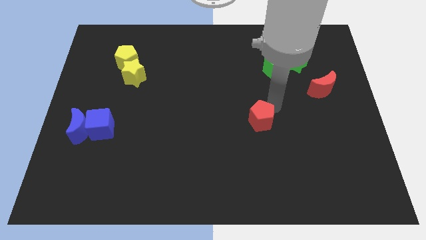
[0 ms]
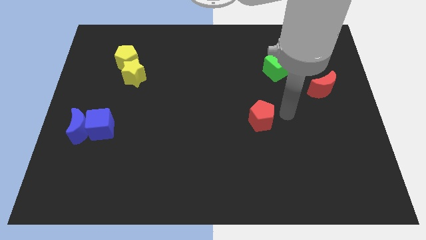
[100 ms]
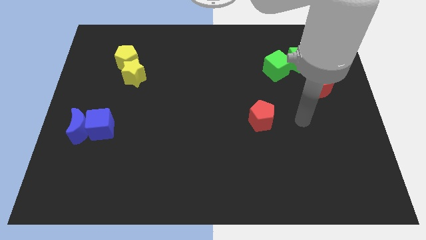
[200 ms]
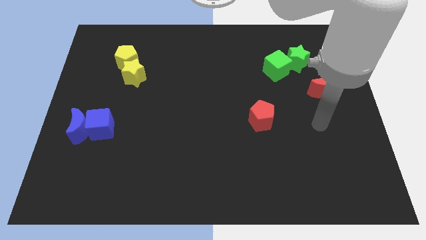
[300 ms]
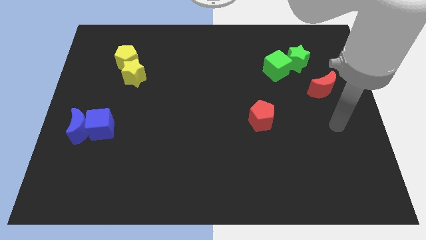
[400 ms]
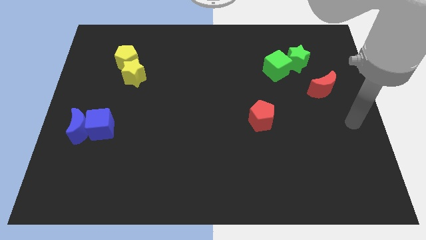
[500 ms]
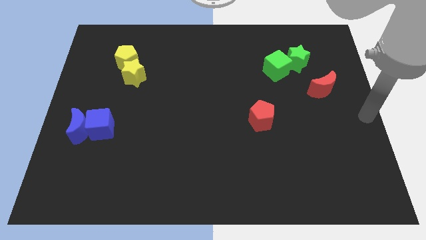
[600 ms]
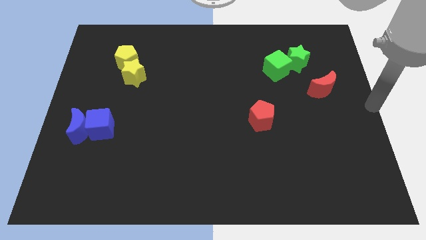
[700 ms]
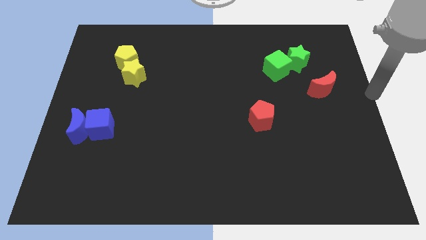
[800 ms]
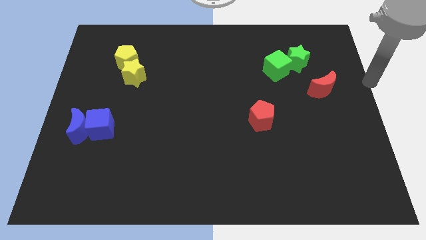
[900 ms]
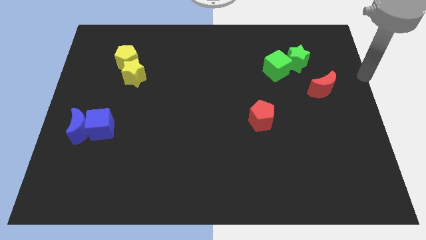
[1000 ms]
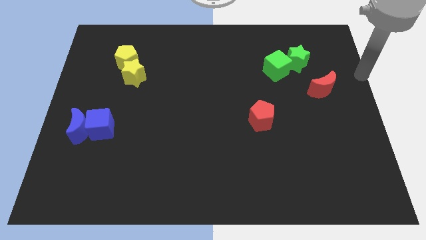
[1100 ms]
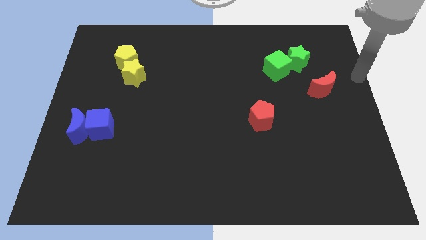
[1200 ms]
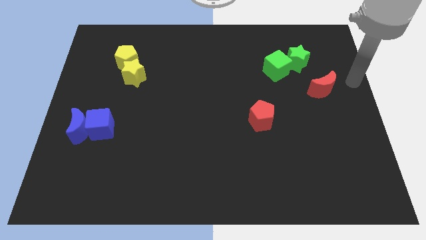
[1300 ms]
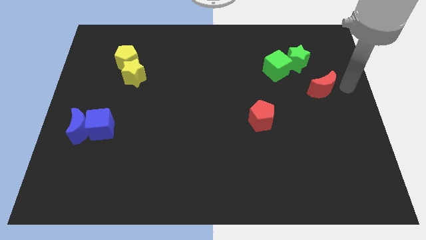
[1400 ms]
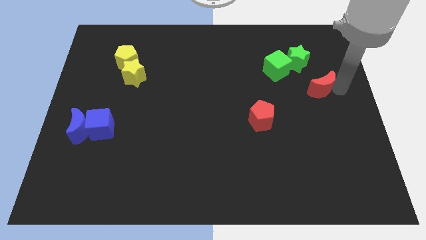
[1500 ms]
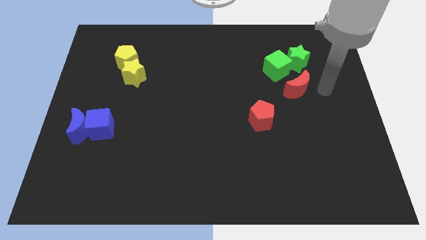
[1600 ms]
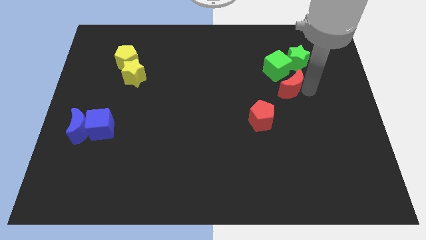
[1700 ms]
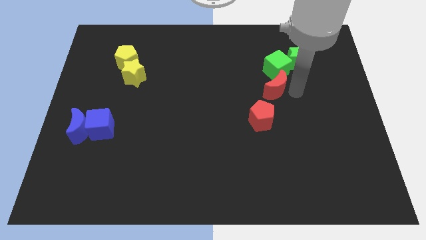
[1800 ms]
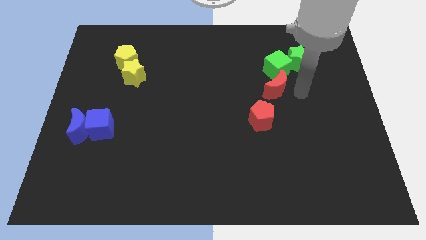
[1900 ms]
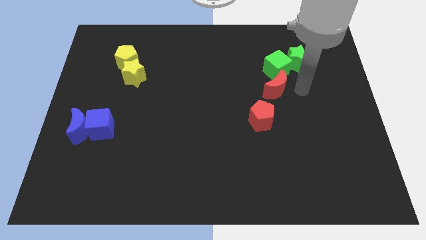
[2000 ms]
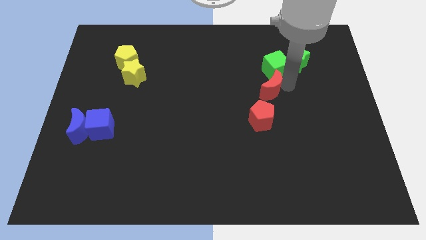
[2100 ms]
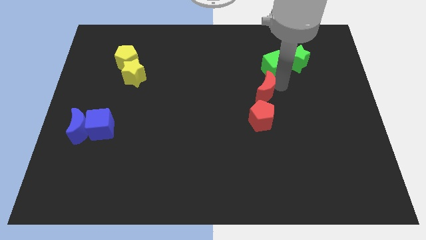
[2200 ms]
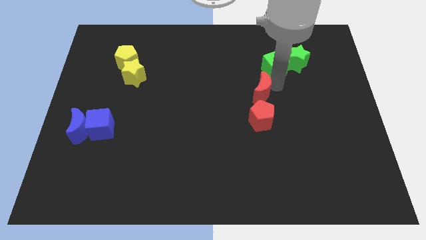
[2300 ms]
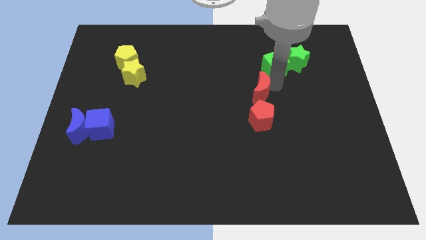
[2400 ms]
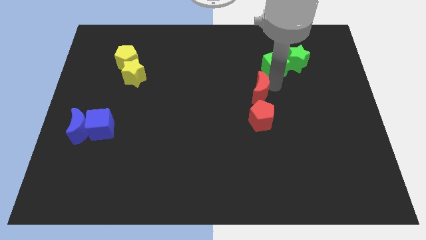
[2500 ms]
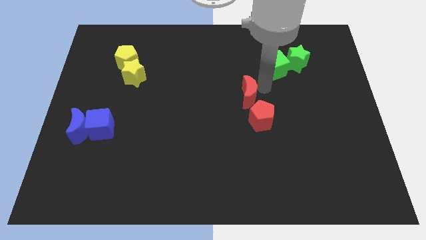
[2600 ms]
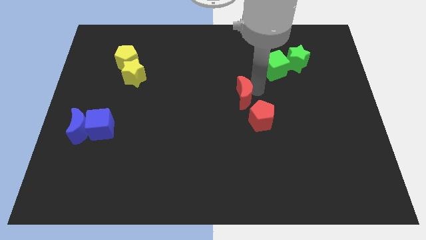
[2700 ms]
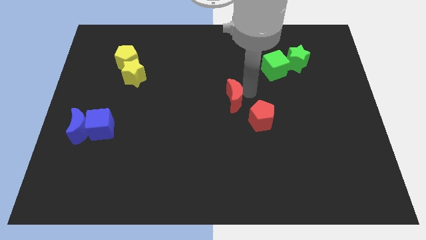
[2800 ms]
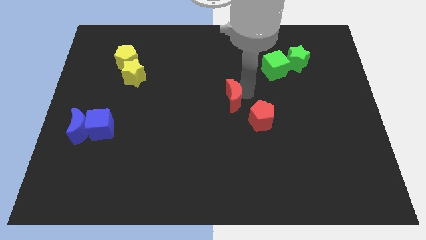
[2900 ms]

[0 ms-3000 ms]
push the red moon towards the center of the board

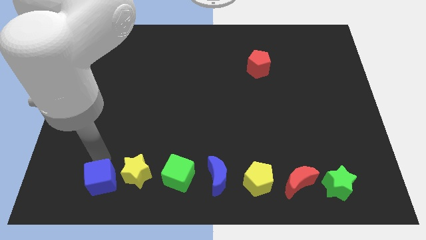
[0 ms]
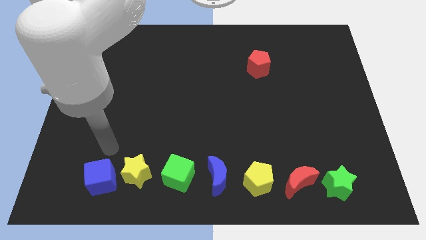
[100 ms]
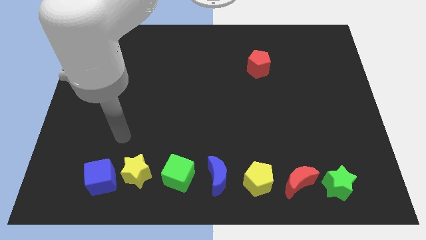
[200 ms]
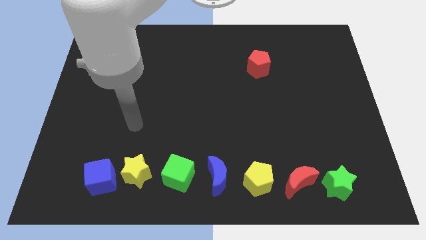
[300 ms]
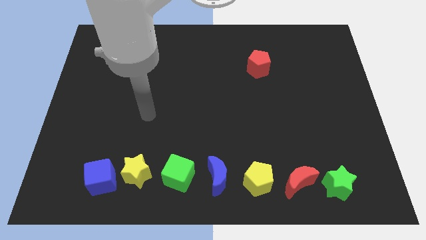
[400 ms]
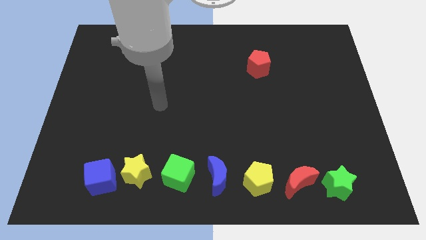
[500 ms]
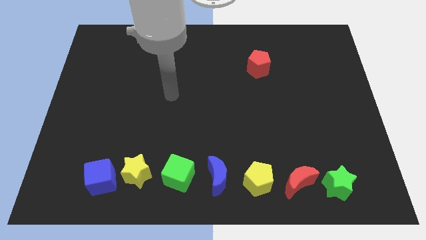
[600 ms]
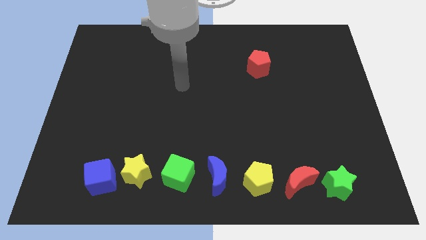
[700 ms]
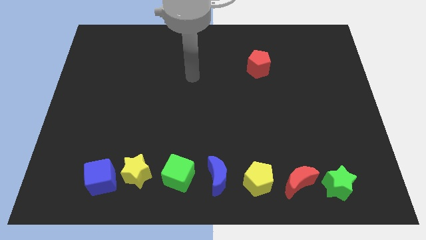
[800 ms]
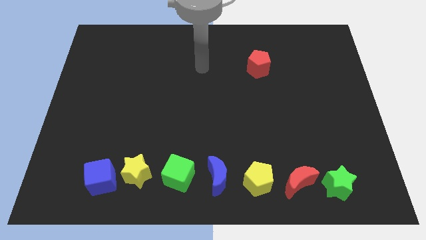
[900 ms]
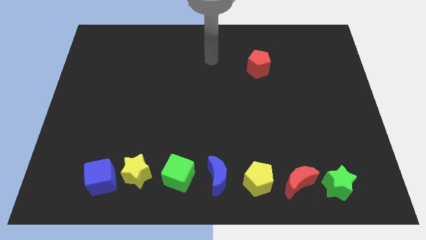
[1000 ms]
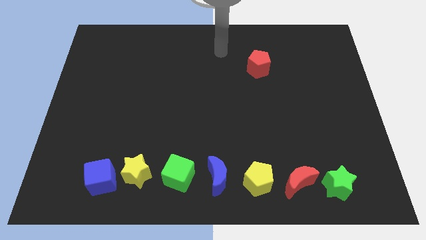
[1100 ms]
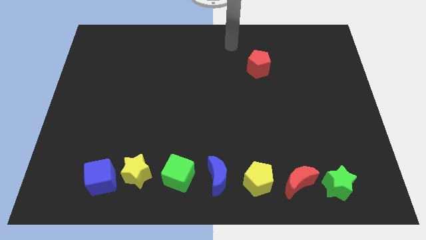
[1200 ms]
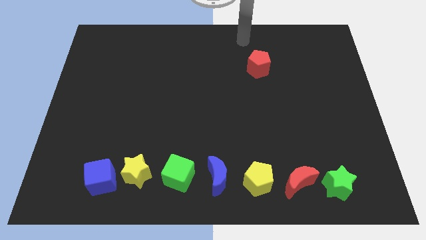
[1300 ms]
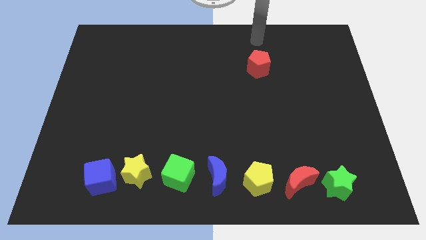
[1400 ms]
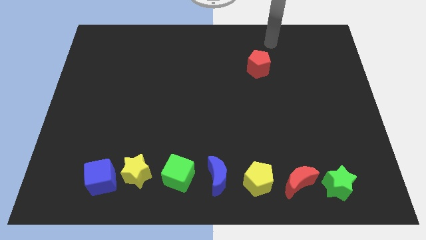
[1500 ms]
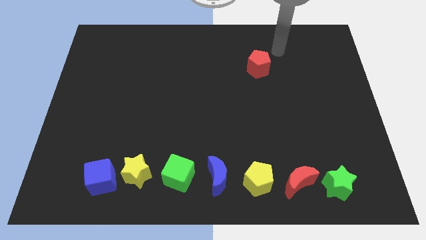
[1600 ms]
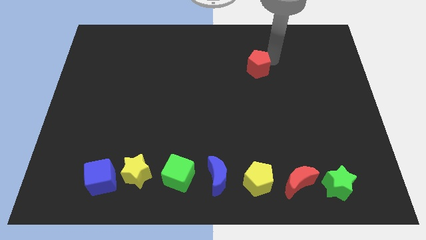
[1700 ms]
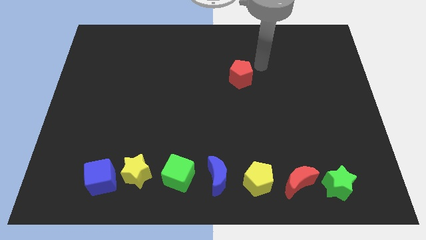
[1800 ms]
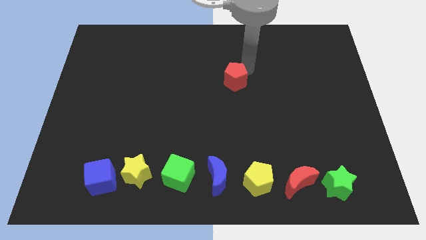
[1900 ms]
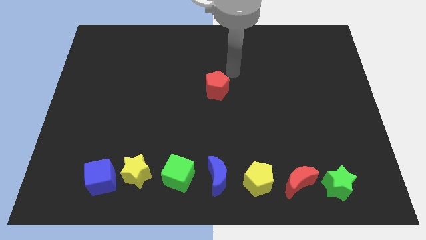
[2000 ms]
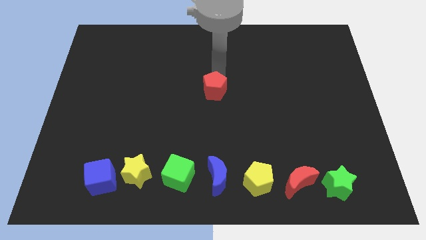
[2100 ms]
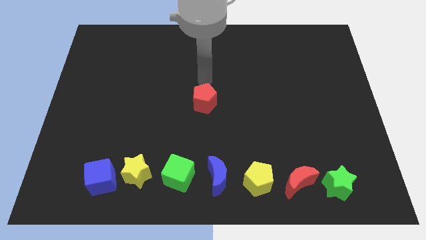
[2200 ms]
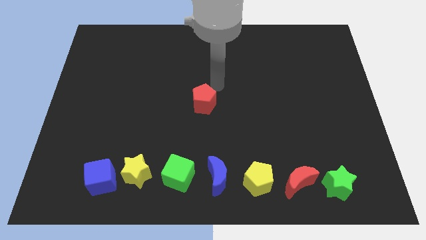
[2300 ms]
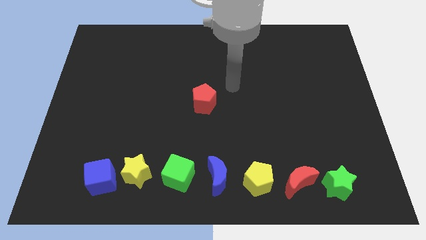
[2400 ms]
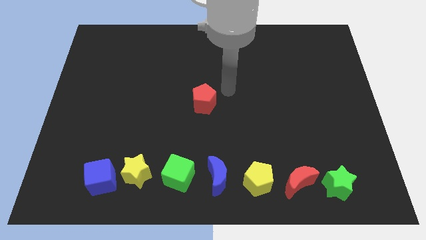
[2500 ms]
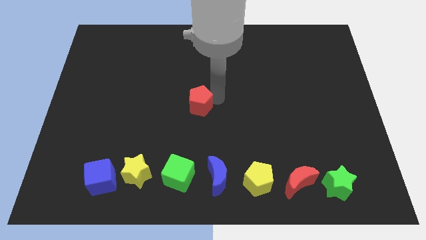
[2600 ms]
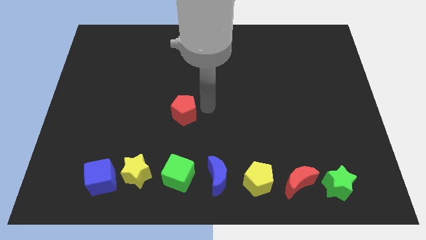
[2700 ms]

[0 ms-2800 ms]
move red pentagon to the center

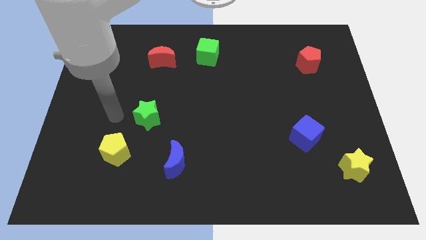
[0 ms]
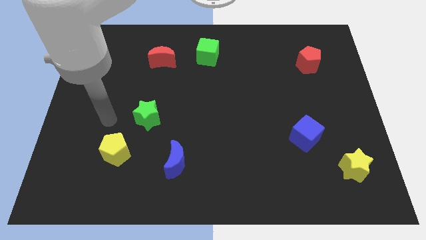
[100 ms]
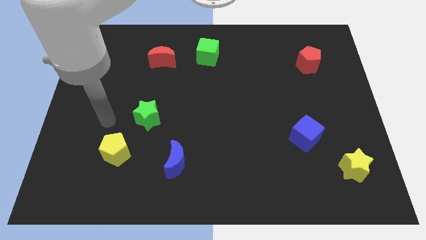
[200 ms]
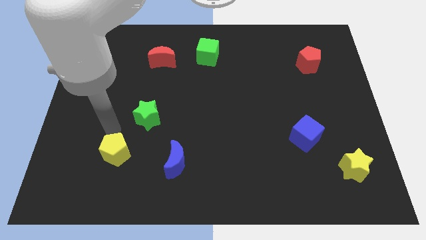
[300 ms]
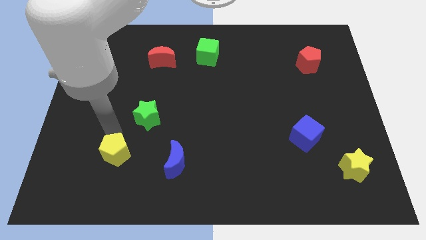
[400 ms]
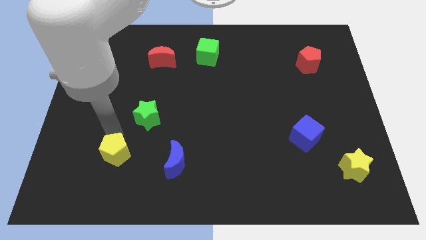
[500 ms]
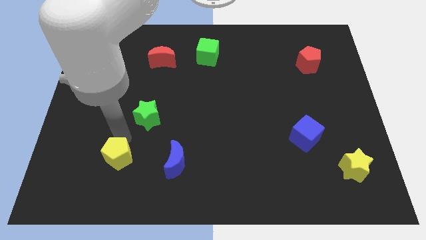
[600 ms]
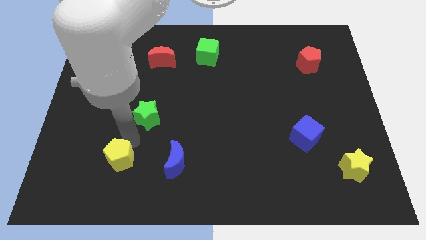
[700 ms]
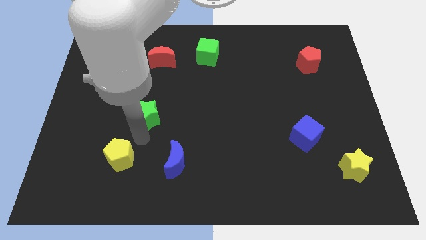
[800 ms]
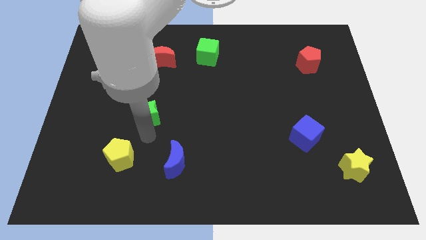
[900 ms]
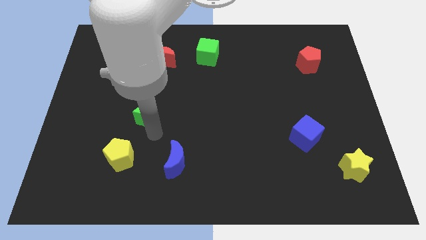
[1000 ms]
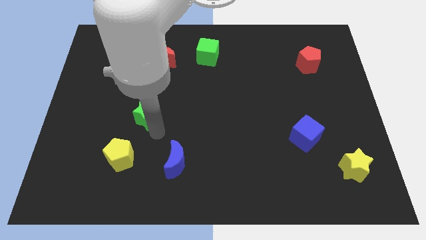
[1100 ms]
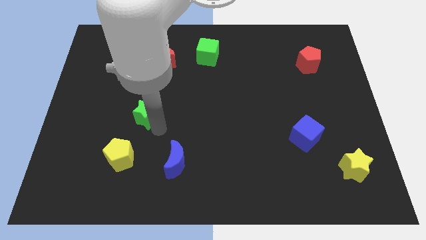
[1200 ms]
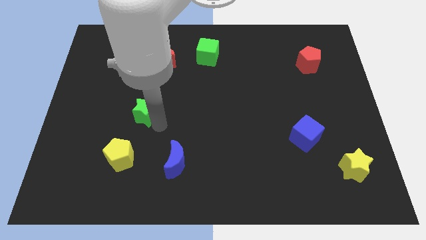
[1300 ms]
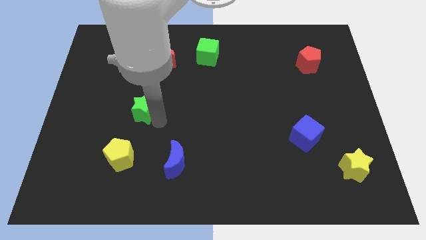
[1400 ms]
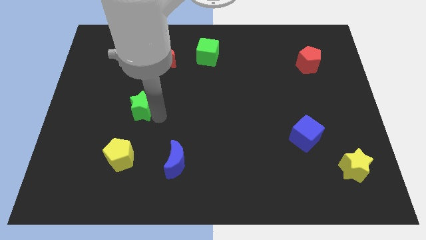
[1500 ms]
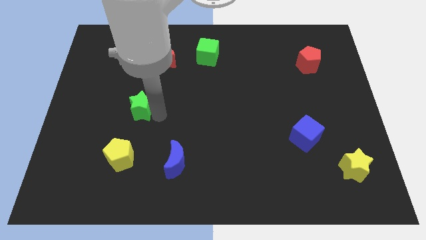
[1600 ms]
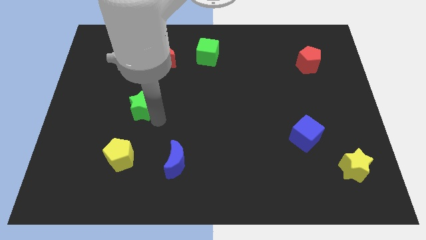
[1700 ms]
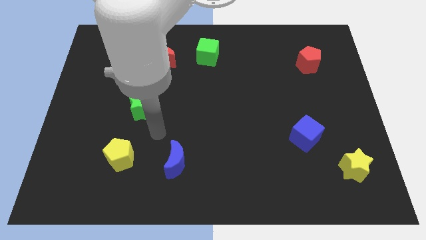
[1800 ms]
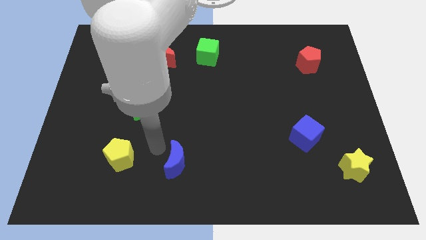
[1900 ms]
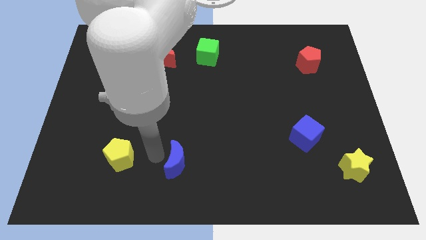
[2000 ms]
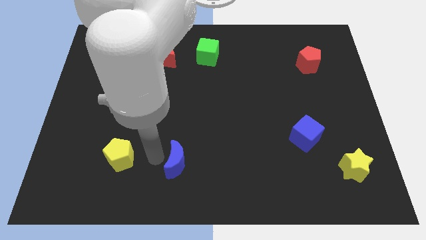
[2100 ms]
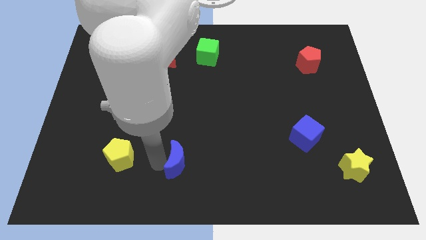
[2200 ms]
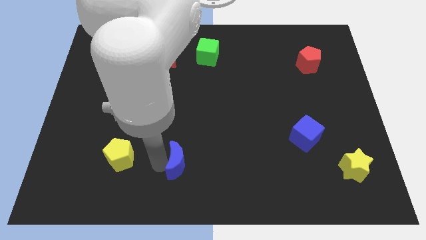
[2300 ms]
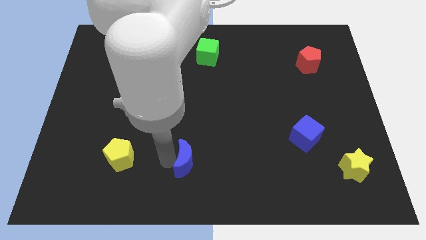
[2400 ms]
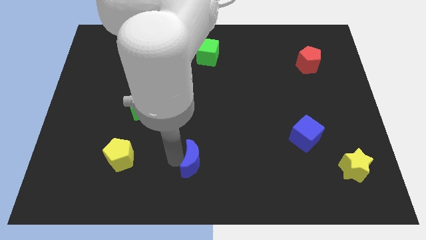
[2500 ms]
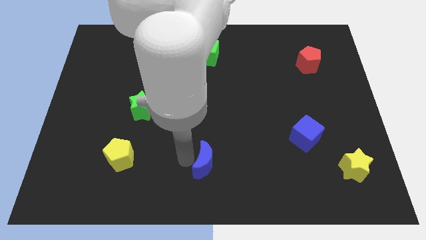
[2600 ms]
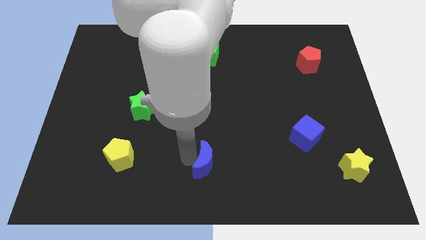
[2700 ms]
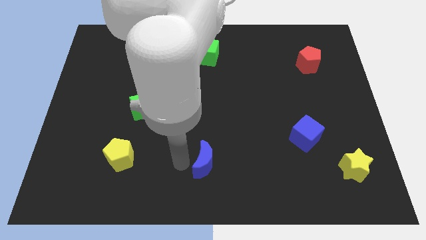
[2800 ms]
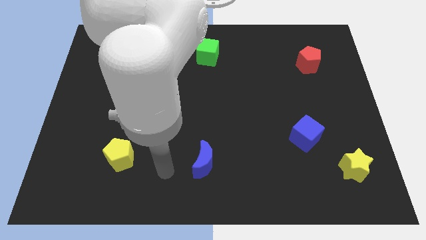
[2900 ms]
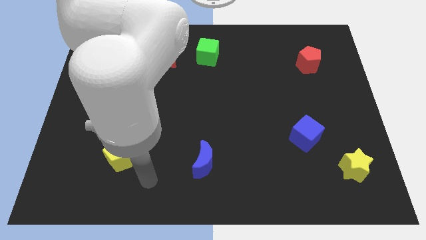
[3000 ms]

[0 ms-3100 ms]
push the blue crescent towards the right side of the board

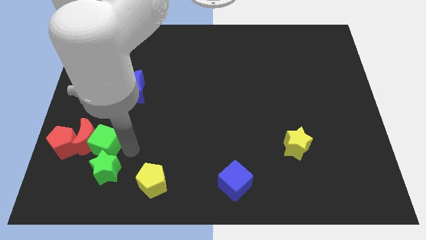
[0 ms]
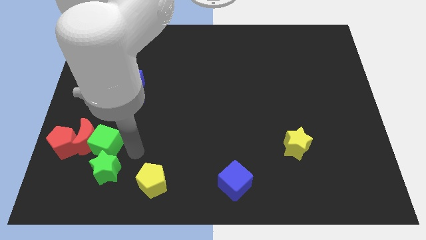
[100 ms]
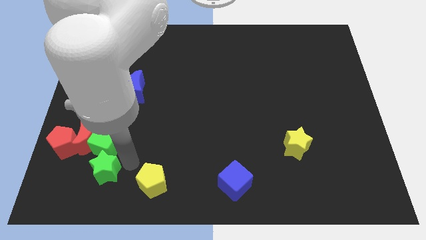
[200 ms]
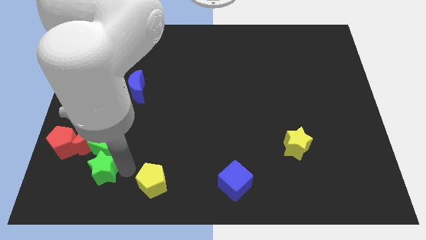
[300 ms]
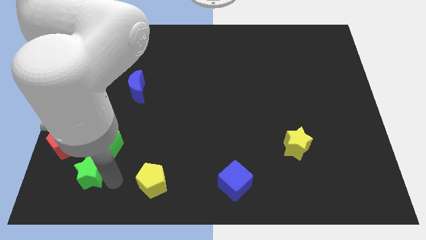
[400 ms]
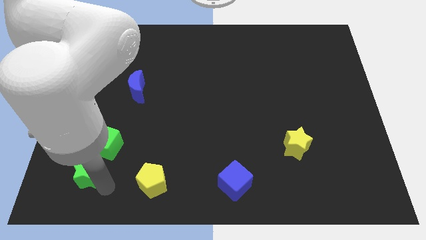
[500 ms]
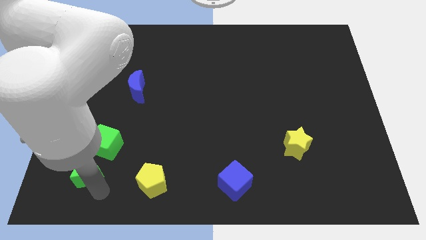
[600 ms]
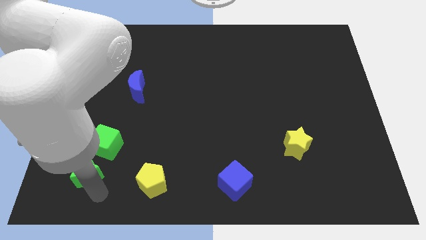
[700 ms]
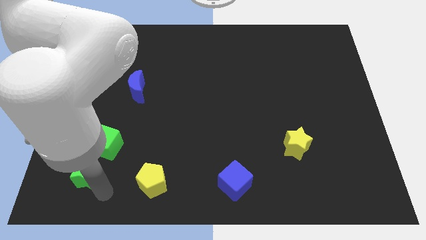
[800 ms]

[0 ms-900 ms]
move the green star below the green cube
